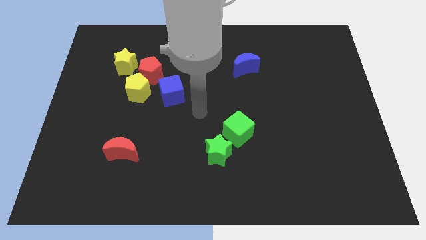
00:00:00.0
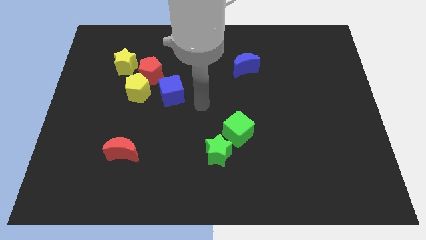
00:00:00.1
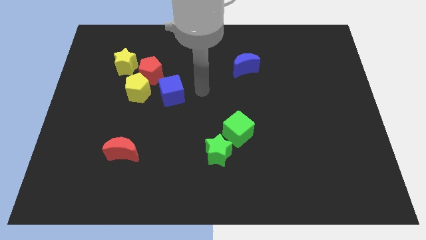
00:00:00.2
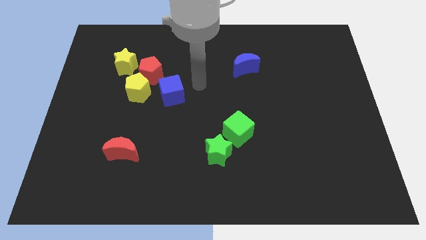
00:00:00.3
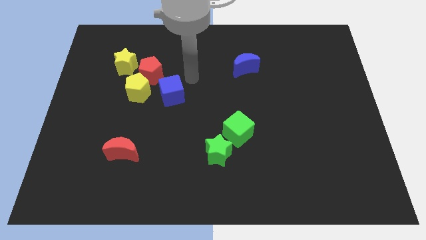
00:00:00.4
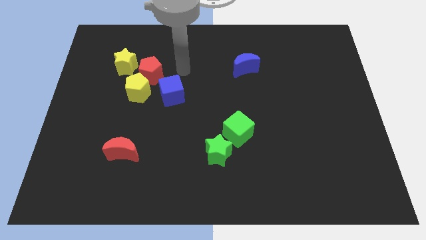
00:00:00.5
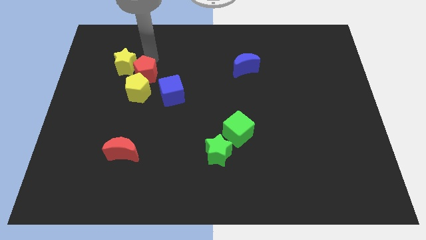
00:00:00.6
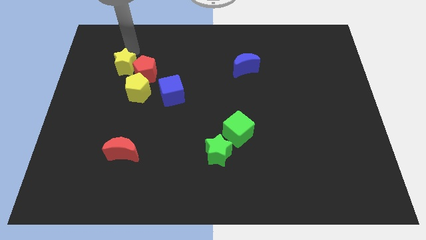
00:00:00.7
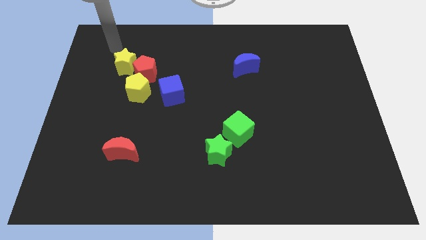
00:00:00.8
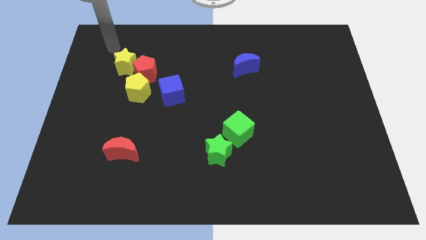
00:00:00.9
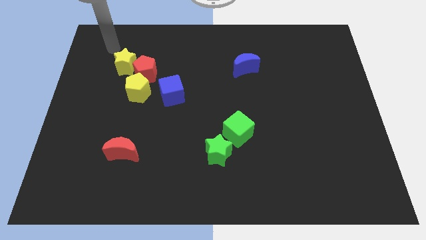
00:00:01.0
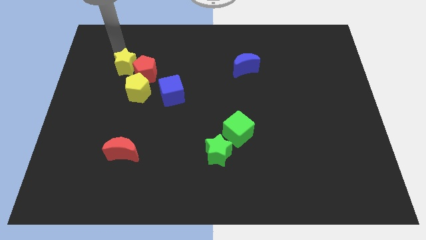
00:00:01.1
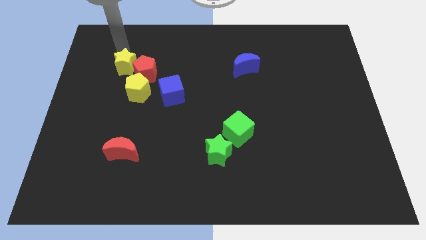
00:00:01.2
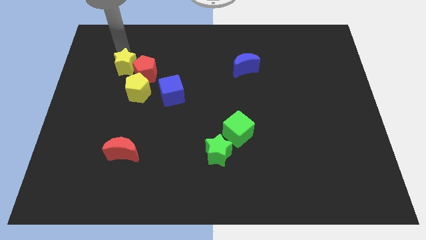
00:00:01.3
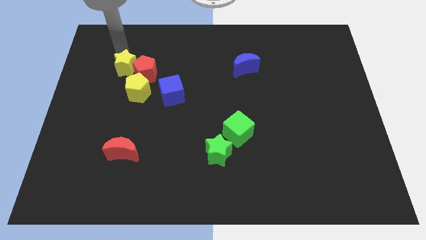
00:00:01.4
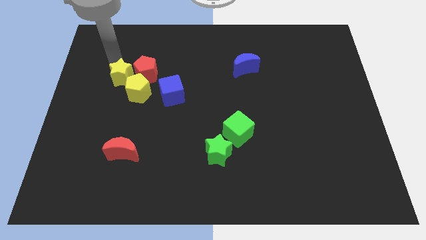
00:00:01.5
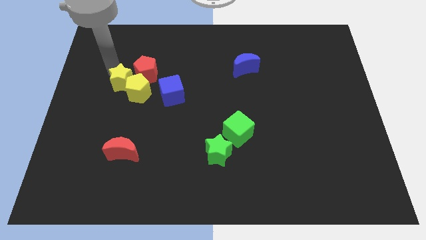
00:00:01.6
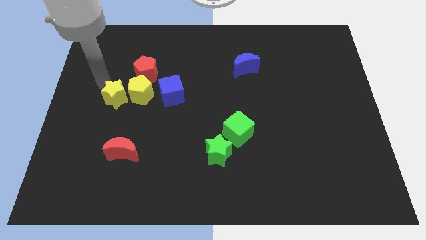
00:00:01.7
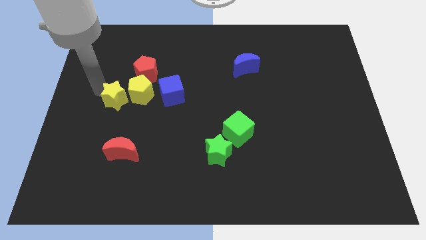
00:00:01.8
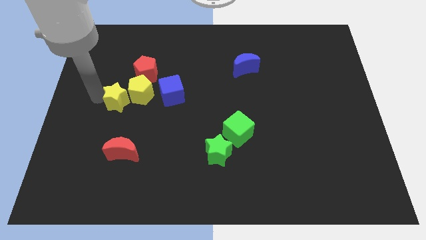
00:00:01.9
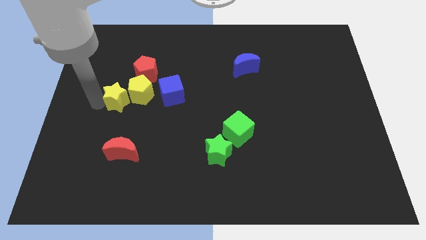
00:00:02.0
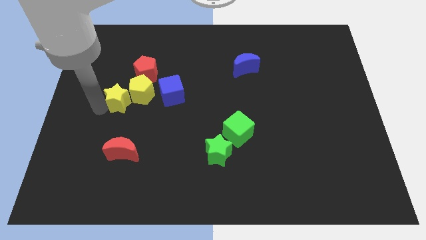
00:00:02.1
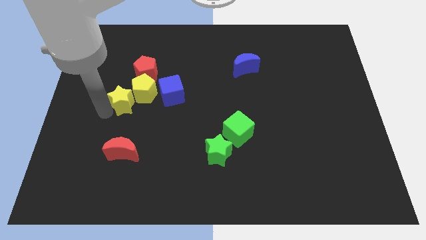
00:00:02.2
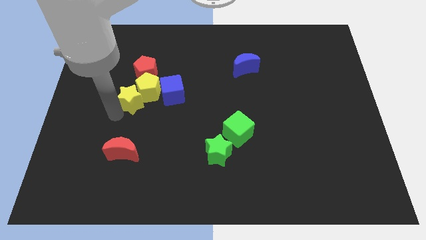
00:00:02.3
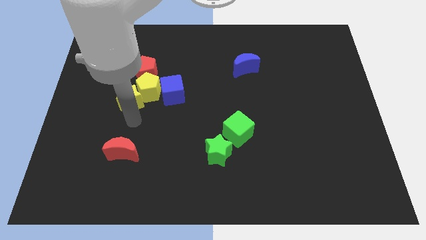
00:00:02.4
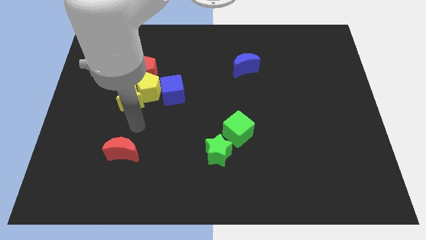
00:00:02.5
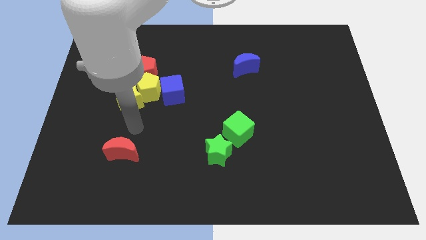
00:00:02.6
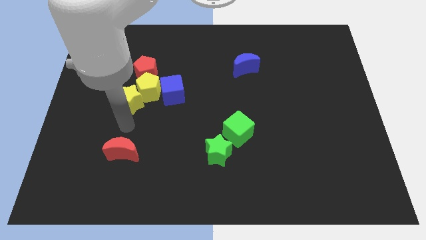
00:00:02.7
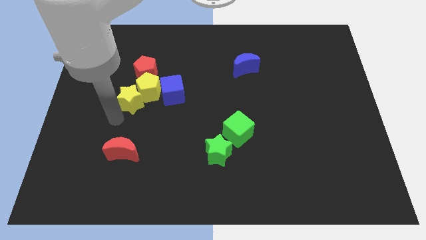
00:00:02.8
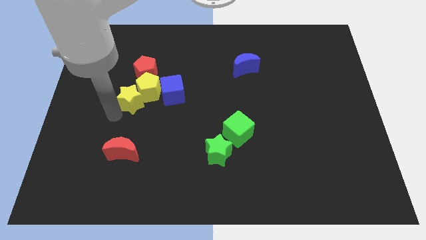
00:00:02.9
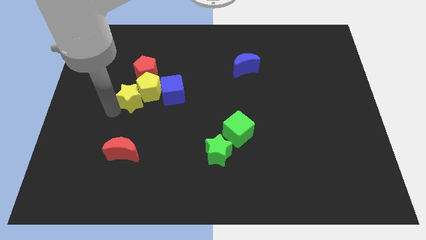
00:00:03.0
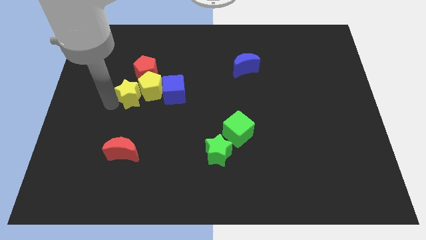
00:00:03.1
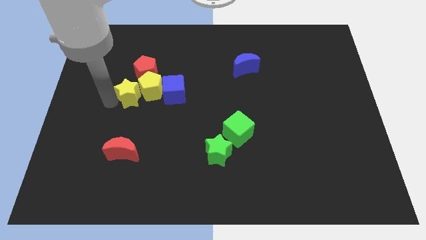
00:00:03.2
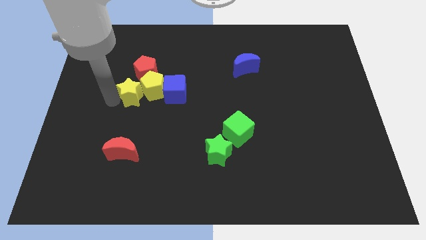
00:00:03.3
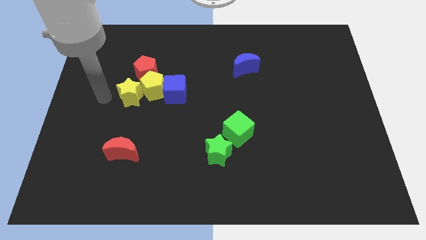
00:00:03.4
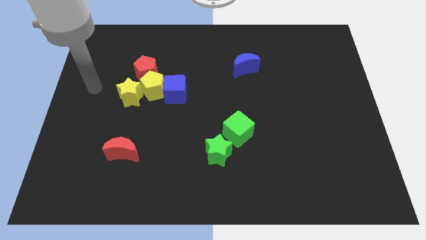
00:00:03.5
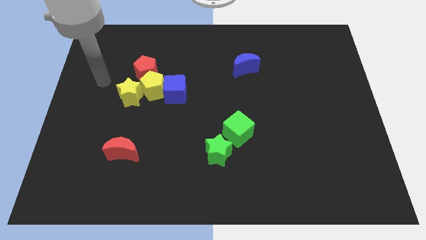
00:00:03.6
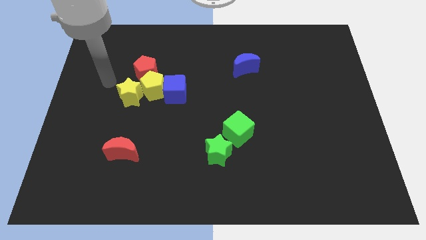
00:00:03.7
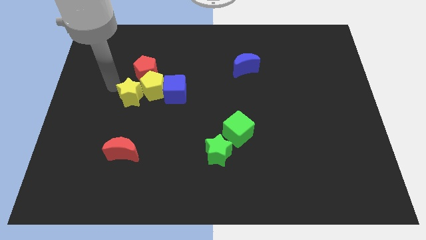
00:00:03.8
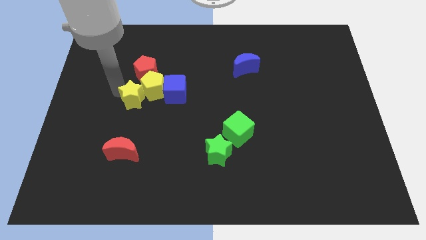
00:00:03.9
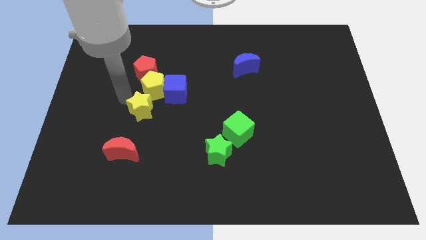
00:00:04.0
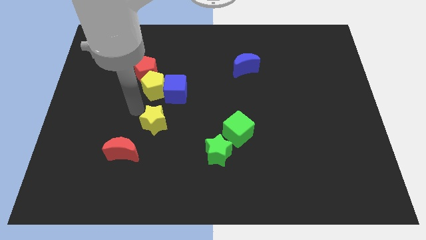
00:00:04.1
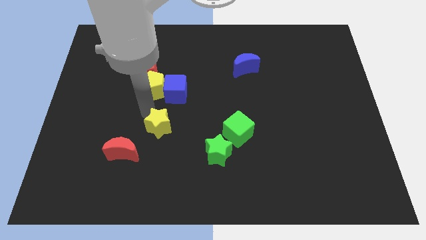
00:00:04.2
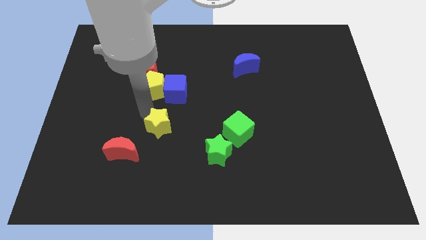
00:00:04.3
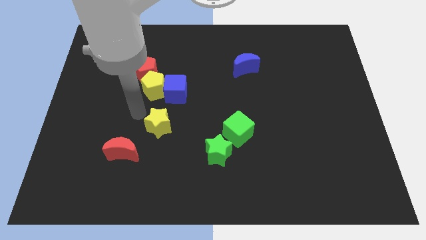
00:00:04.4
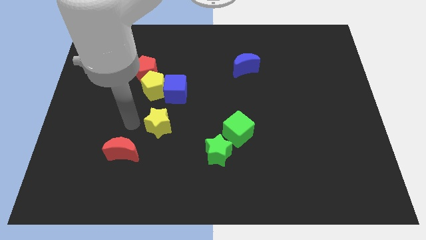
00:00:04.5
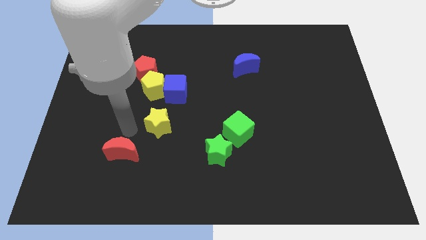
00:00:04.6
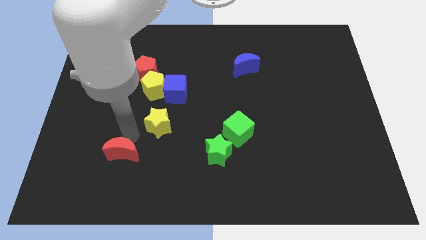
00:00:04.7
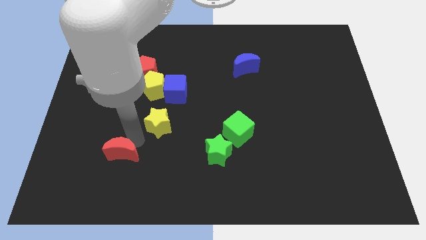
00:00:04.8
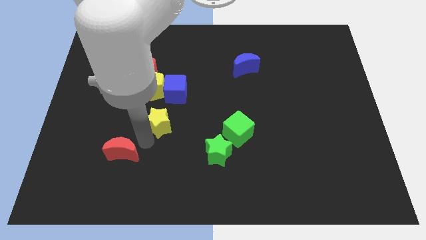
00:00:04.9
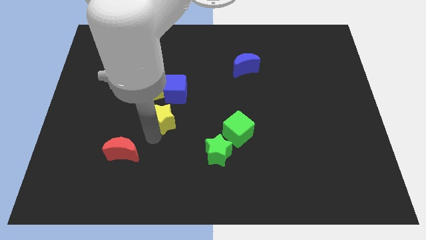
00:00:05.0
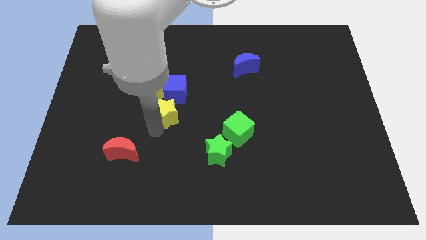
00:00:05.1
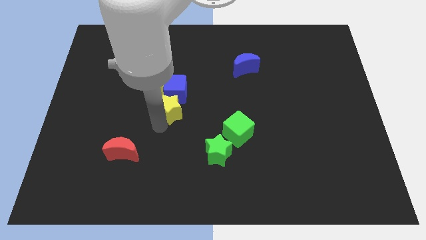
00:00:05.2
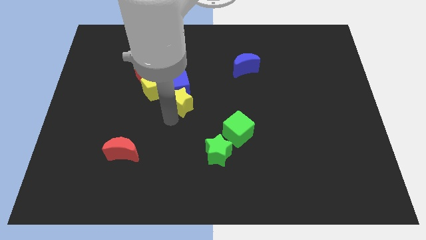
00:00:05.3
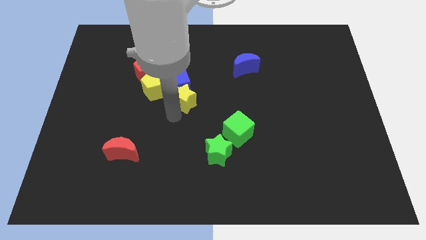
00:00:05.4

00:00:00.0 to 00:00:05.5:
move the yellow star close to the blue cube

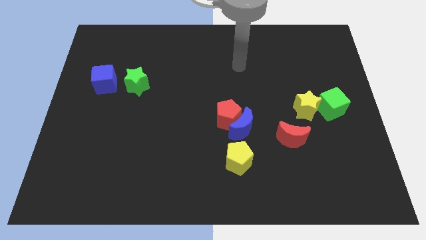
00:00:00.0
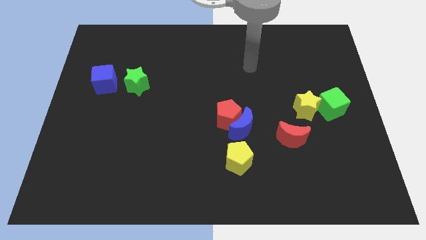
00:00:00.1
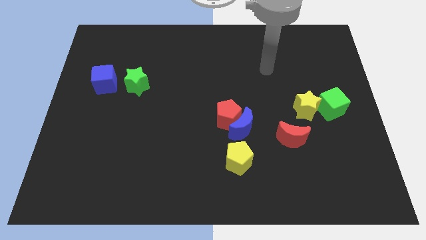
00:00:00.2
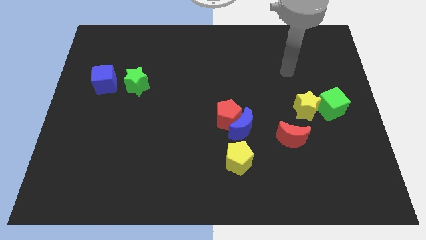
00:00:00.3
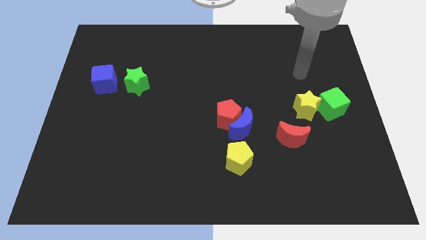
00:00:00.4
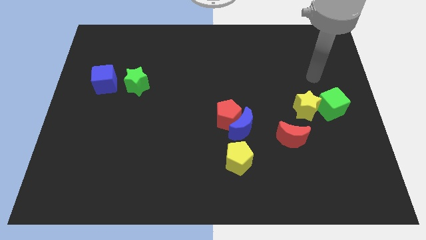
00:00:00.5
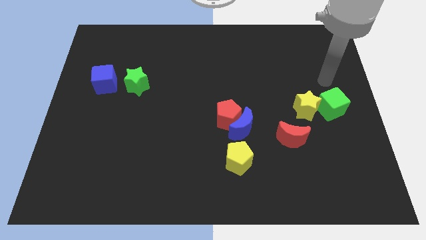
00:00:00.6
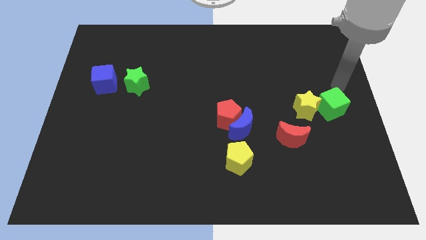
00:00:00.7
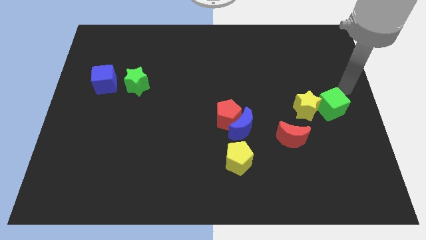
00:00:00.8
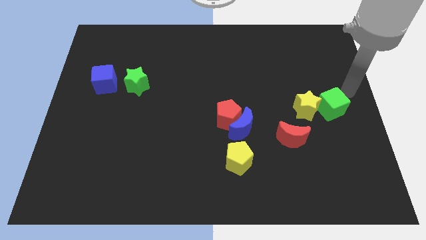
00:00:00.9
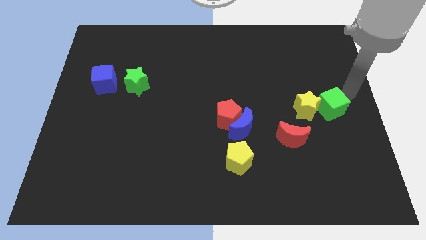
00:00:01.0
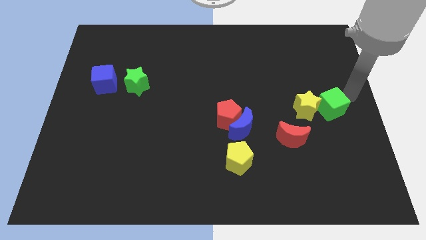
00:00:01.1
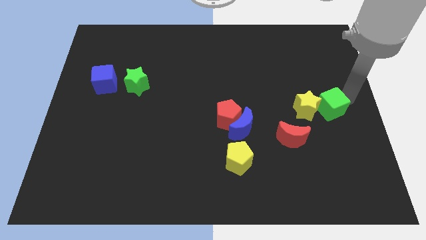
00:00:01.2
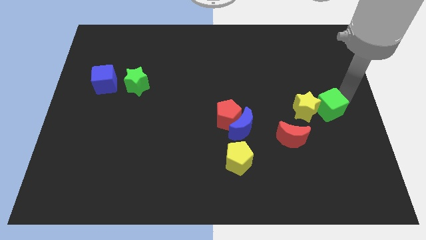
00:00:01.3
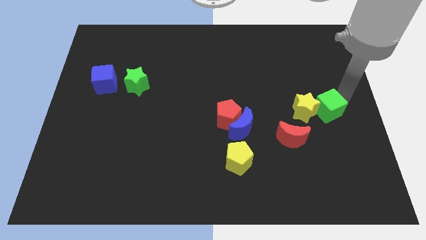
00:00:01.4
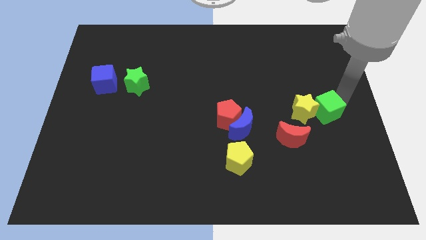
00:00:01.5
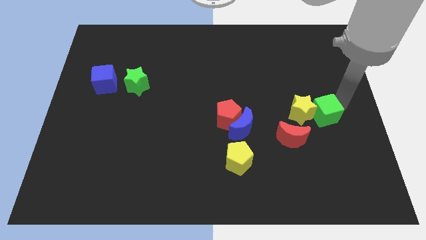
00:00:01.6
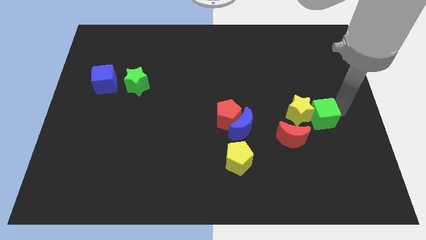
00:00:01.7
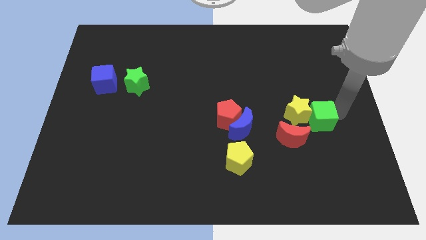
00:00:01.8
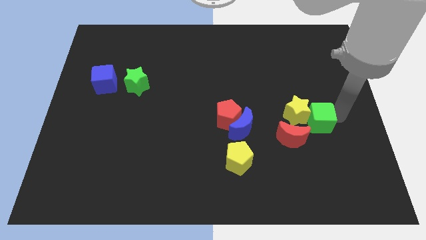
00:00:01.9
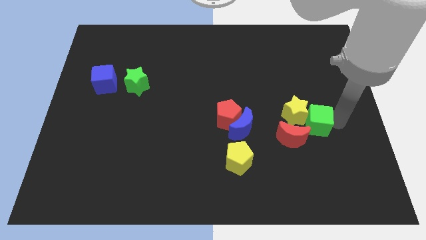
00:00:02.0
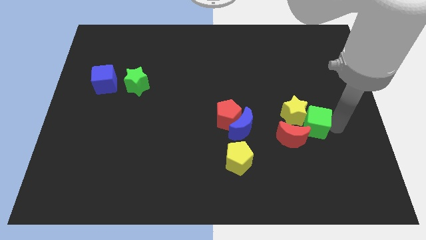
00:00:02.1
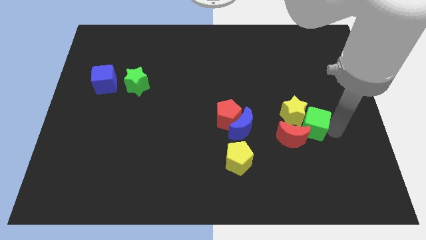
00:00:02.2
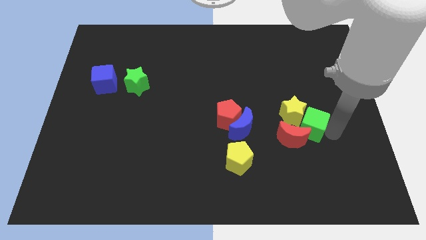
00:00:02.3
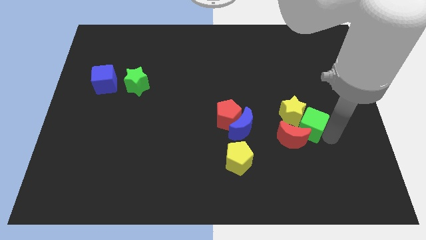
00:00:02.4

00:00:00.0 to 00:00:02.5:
slide the green cube close to the red moon

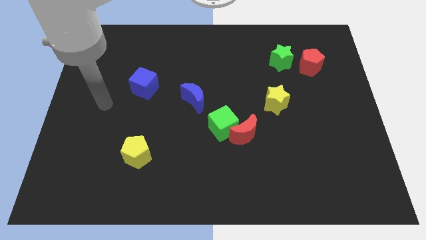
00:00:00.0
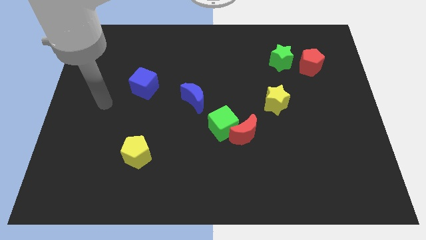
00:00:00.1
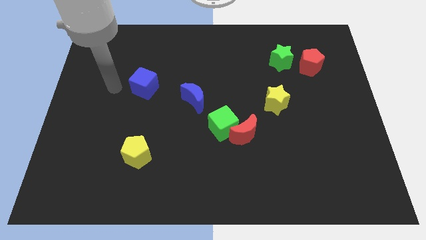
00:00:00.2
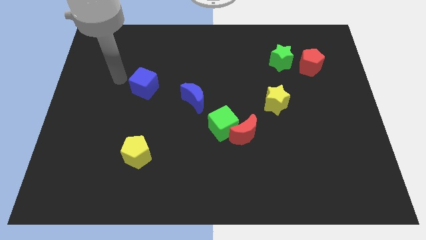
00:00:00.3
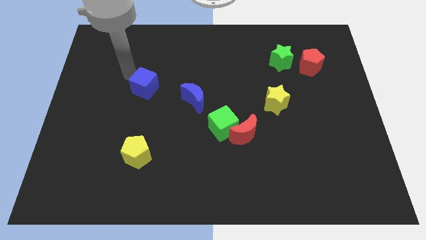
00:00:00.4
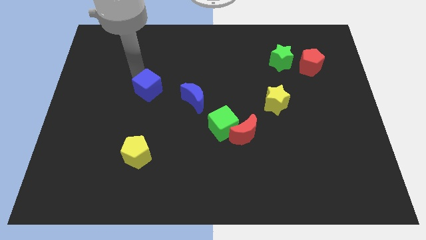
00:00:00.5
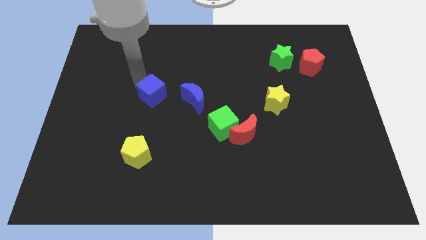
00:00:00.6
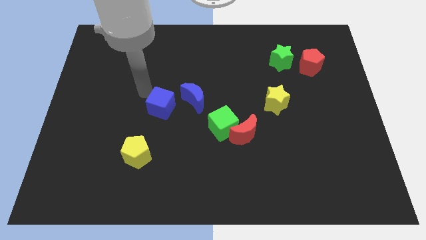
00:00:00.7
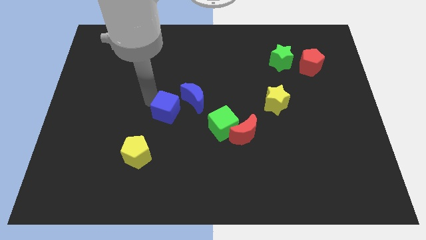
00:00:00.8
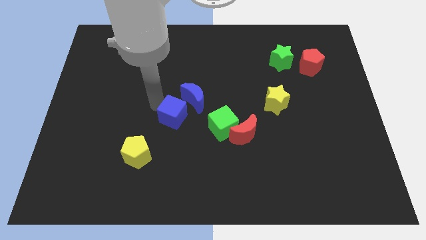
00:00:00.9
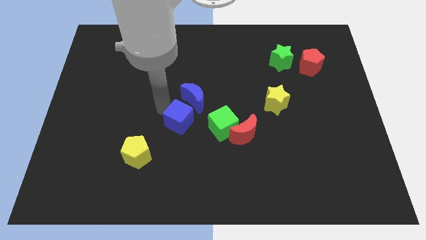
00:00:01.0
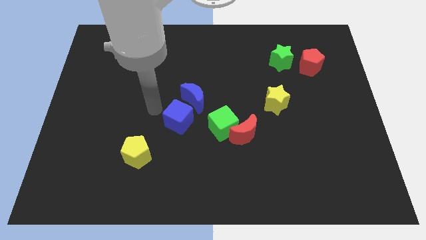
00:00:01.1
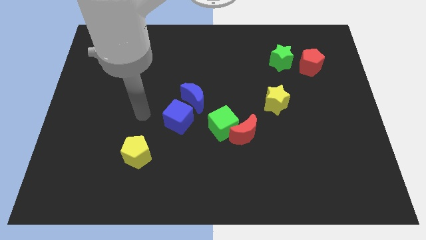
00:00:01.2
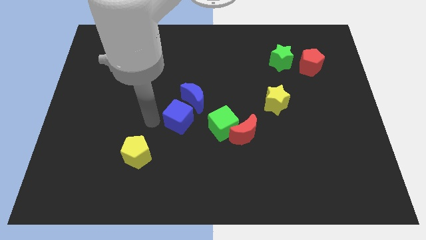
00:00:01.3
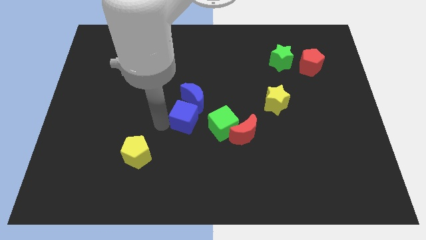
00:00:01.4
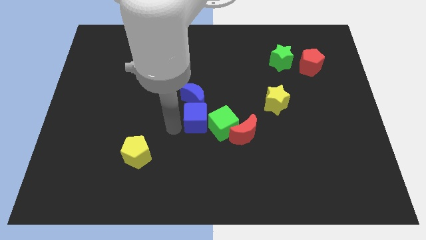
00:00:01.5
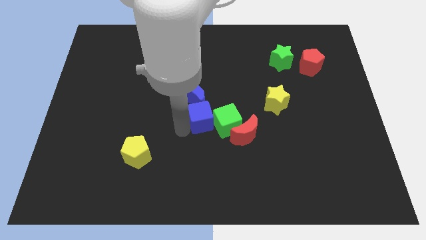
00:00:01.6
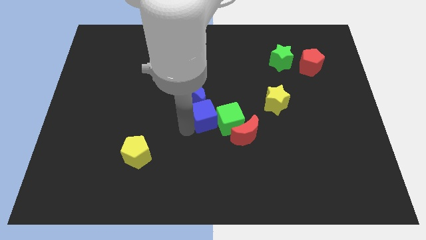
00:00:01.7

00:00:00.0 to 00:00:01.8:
push the blue cube to the green cube
